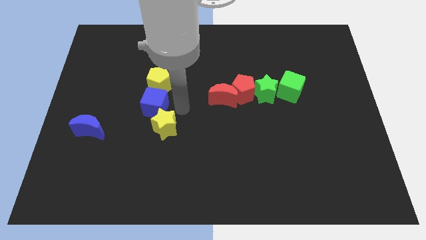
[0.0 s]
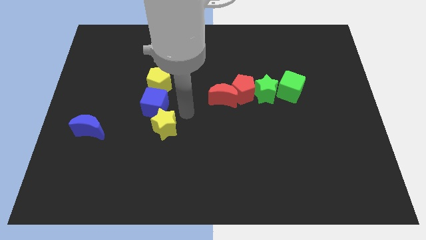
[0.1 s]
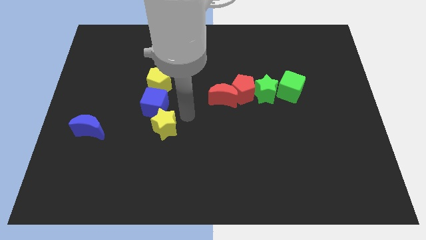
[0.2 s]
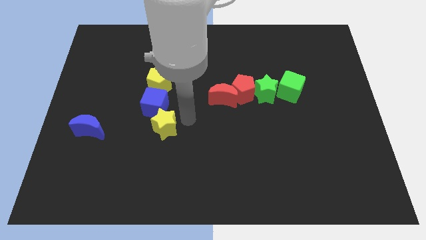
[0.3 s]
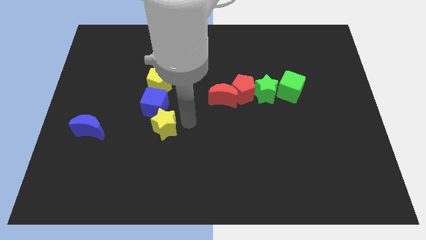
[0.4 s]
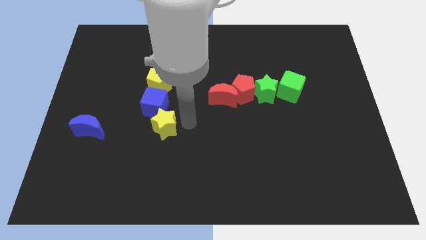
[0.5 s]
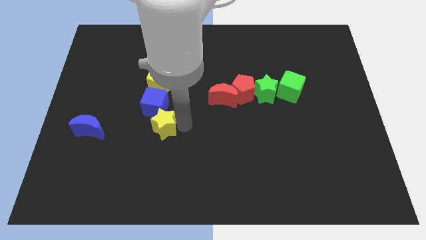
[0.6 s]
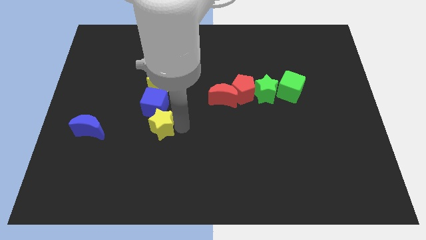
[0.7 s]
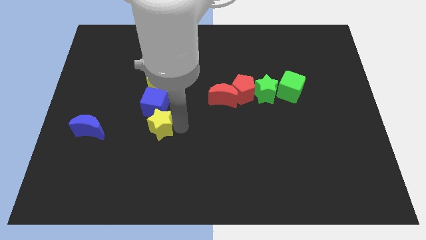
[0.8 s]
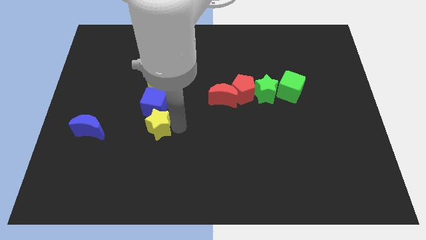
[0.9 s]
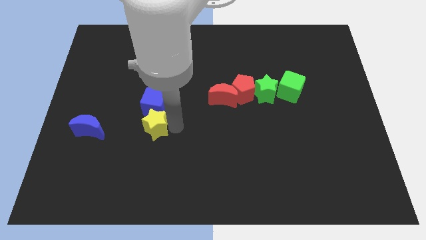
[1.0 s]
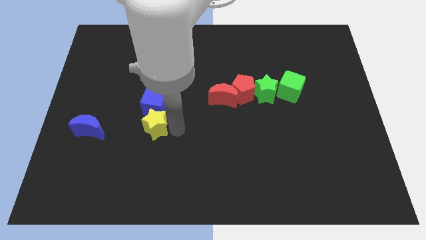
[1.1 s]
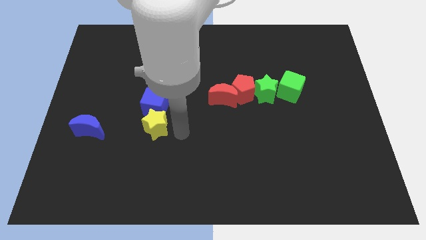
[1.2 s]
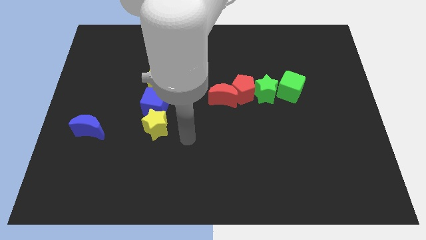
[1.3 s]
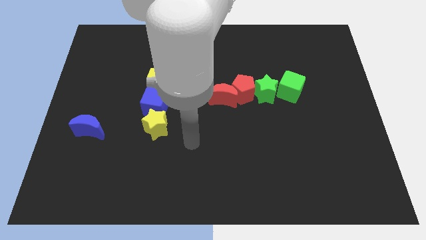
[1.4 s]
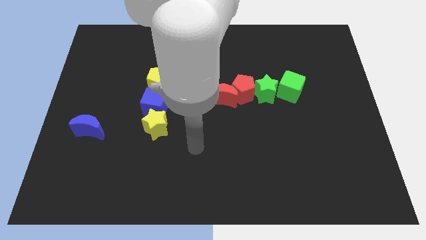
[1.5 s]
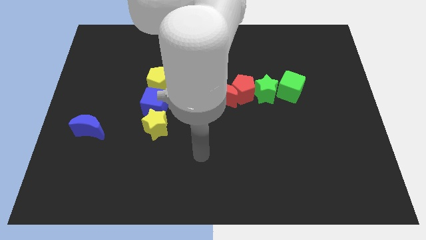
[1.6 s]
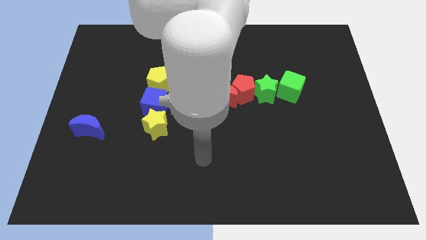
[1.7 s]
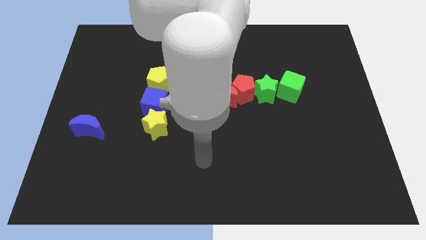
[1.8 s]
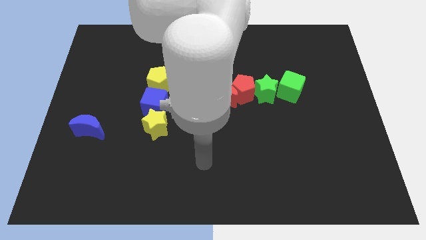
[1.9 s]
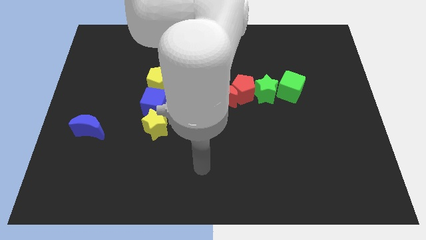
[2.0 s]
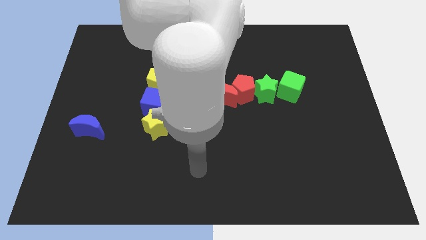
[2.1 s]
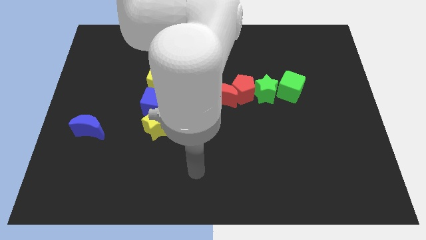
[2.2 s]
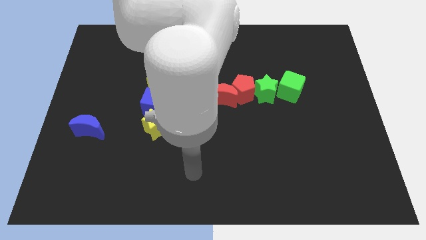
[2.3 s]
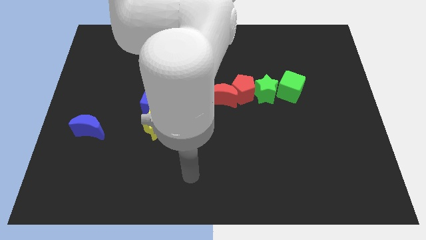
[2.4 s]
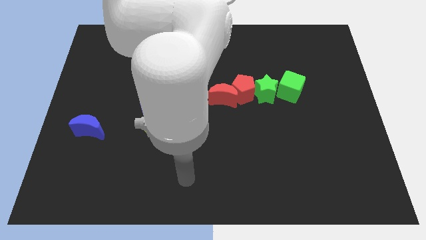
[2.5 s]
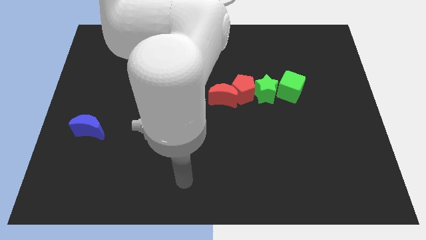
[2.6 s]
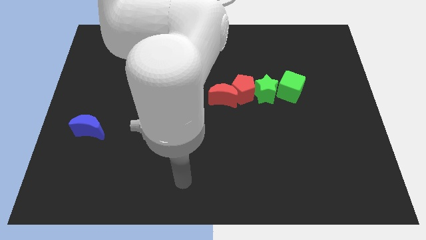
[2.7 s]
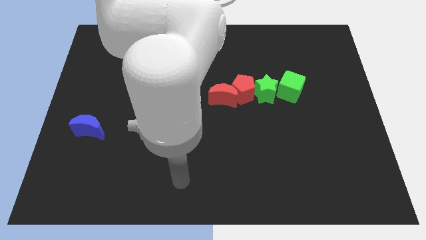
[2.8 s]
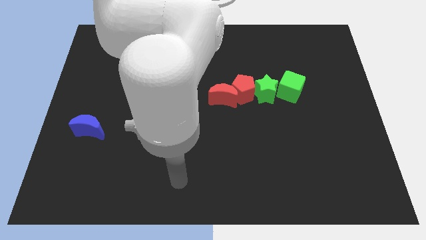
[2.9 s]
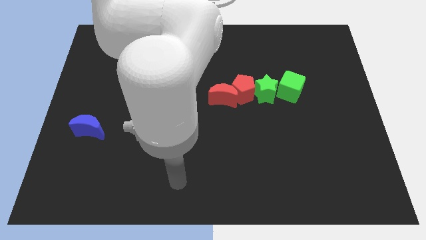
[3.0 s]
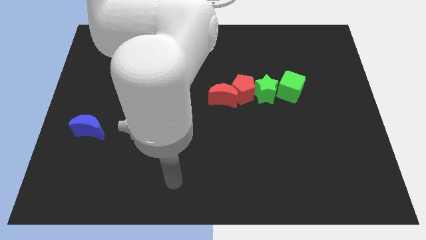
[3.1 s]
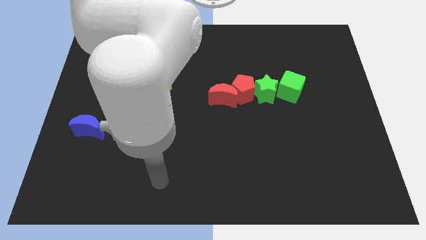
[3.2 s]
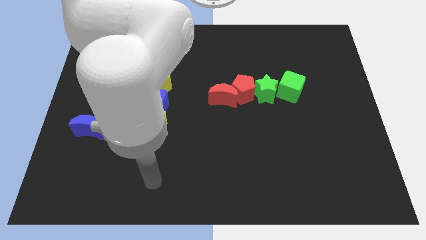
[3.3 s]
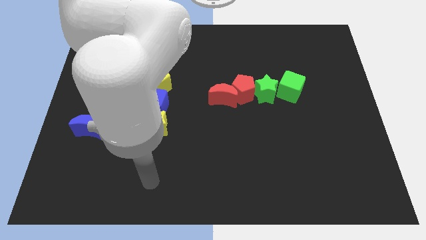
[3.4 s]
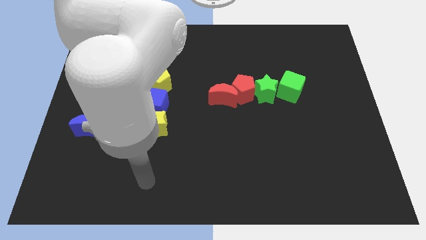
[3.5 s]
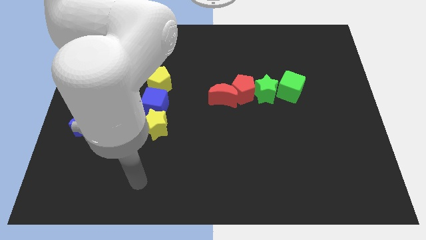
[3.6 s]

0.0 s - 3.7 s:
move the yellow star slightly left

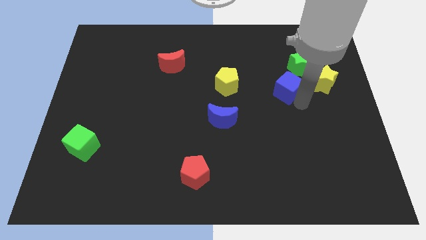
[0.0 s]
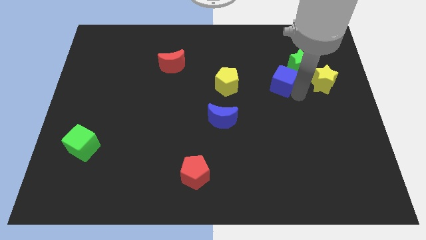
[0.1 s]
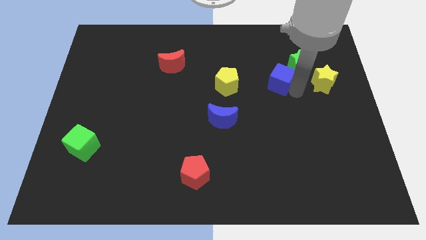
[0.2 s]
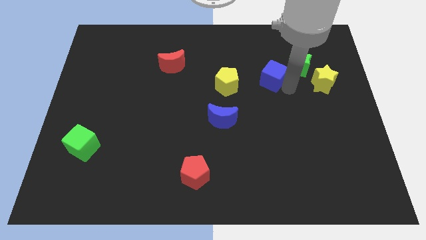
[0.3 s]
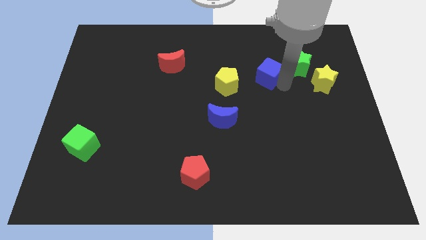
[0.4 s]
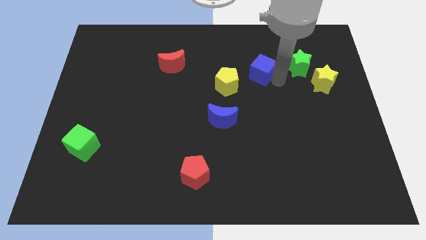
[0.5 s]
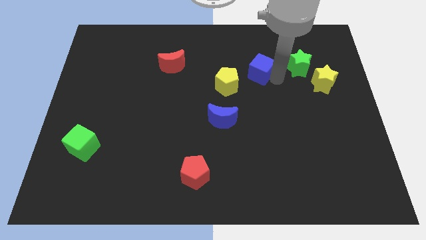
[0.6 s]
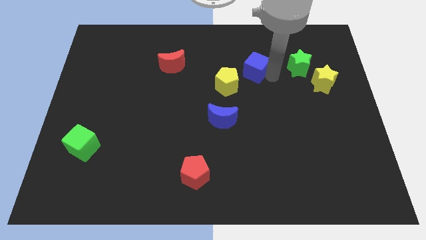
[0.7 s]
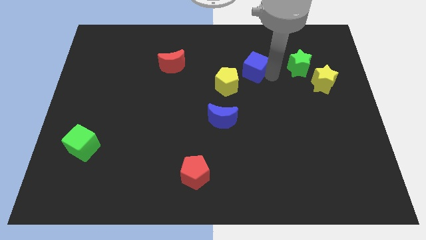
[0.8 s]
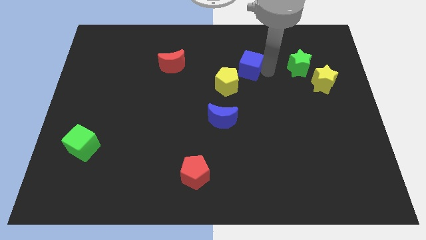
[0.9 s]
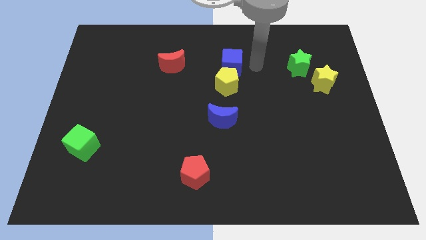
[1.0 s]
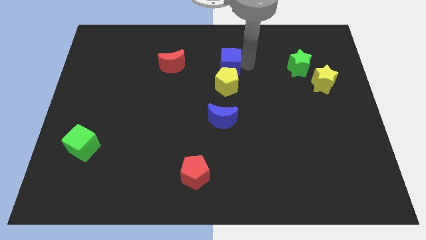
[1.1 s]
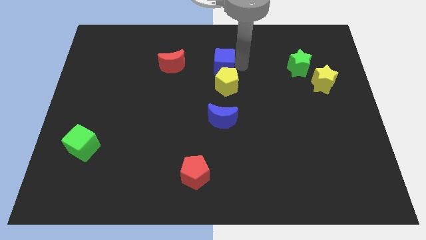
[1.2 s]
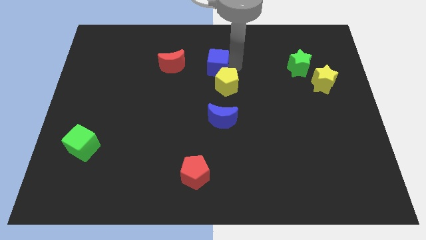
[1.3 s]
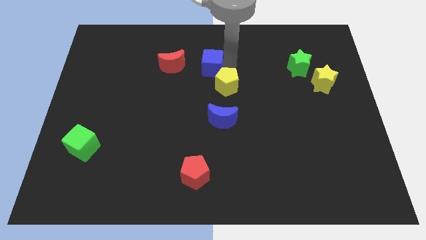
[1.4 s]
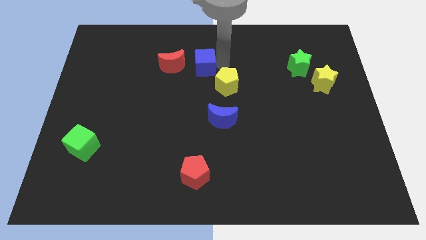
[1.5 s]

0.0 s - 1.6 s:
place the blue cube close to the red moon

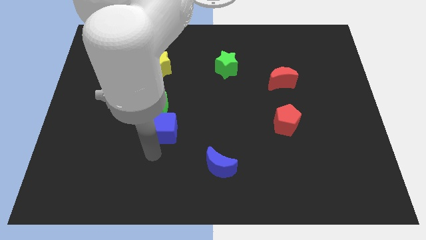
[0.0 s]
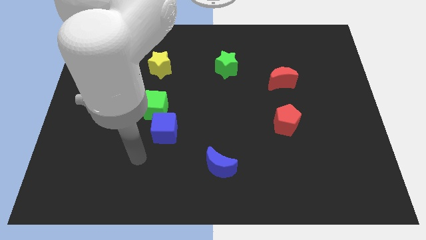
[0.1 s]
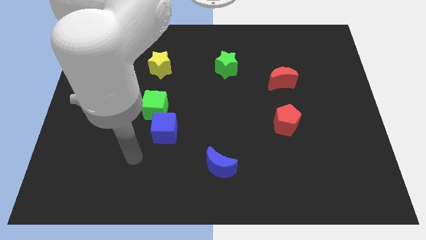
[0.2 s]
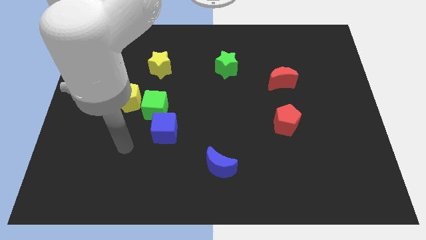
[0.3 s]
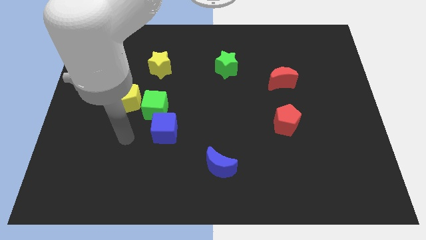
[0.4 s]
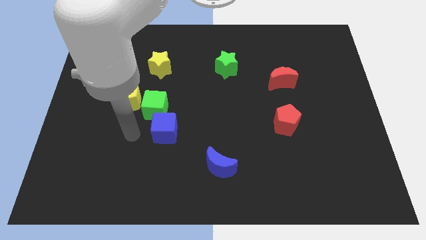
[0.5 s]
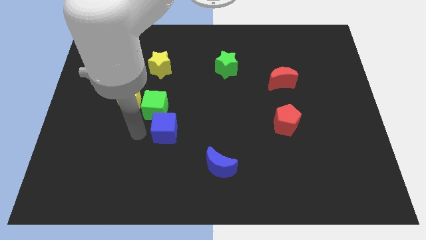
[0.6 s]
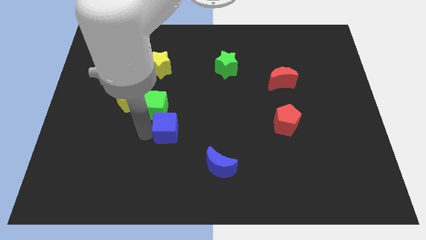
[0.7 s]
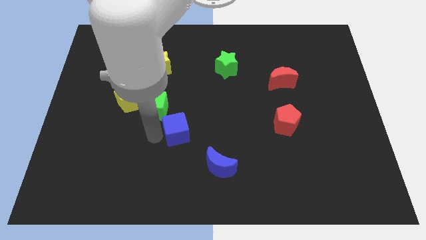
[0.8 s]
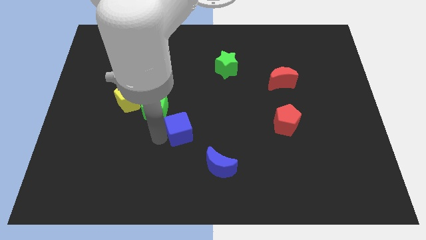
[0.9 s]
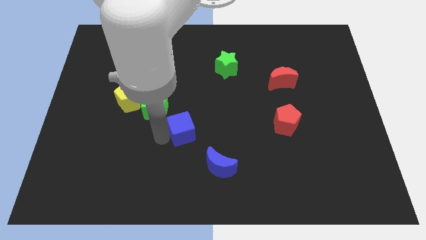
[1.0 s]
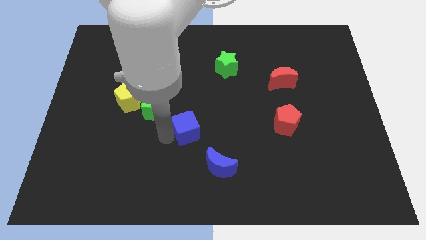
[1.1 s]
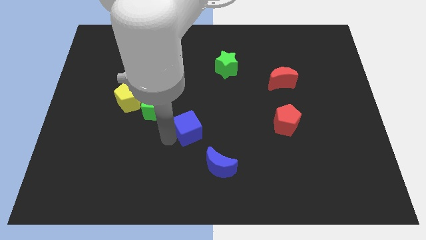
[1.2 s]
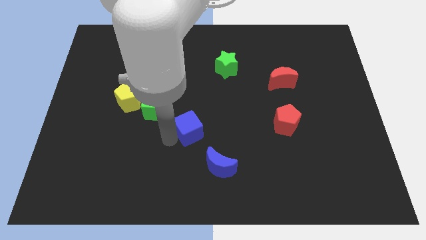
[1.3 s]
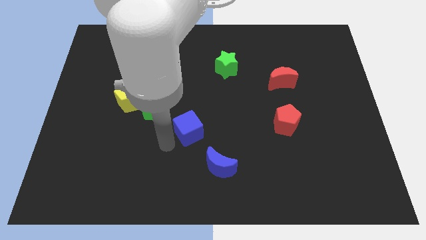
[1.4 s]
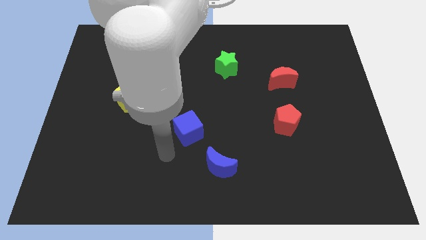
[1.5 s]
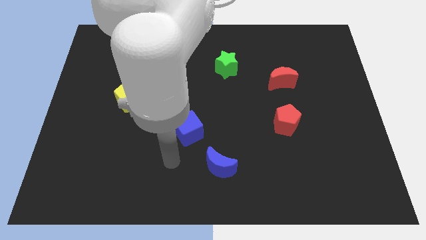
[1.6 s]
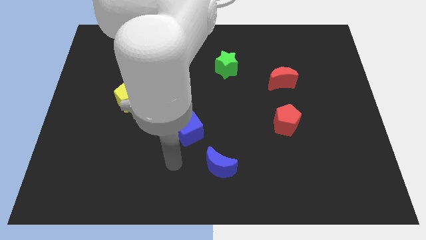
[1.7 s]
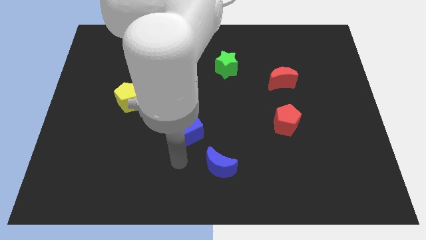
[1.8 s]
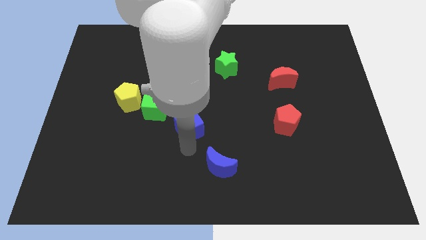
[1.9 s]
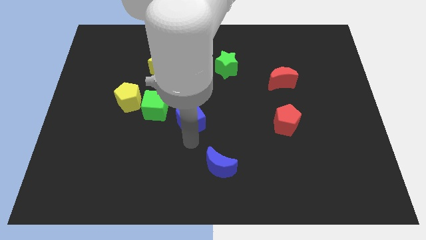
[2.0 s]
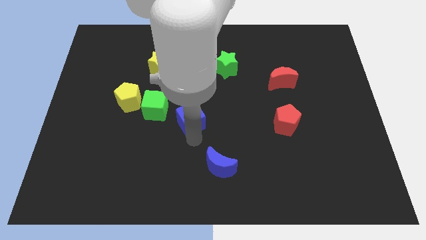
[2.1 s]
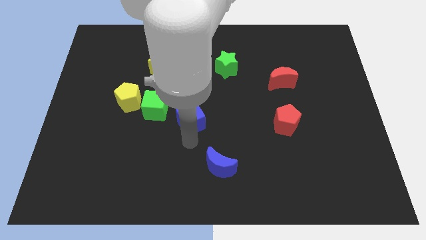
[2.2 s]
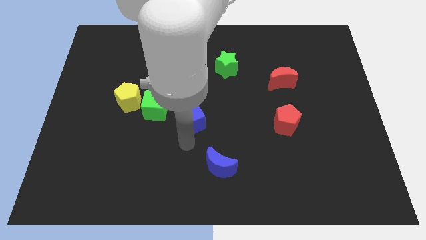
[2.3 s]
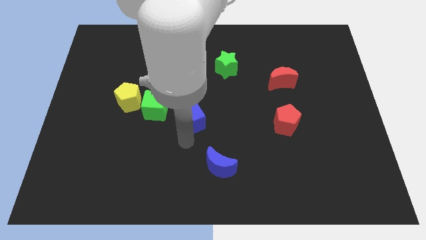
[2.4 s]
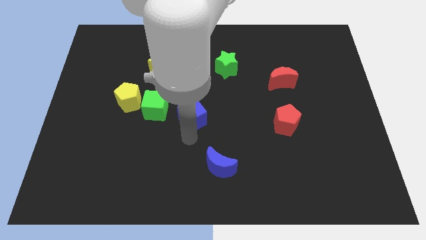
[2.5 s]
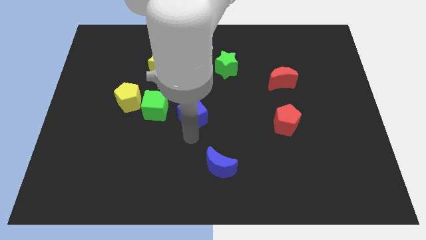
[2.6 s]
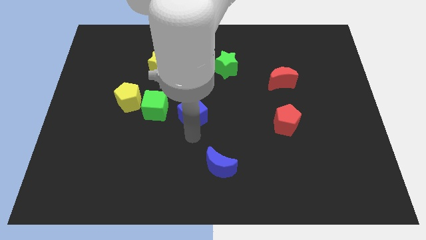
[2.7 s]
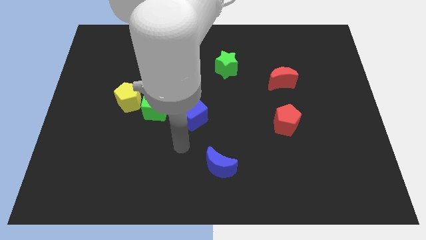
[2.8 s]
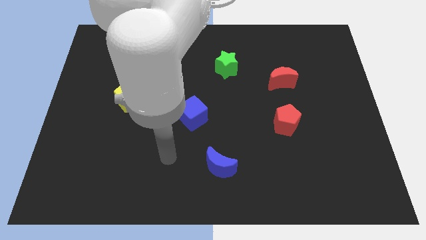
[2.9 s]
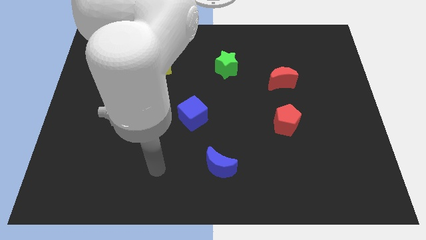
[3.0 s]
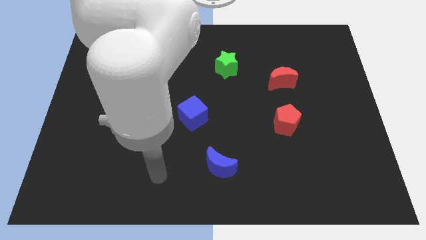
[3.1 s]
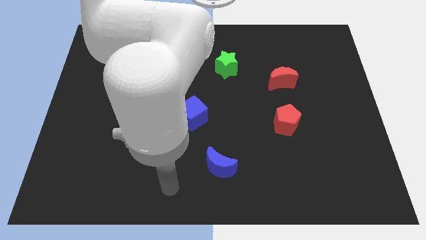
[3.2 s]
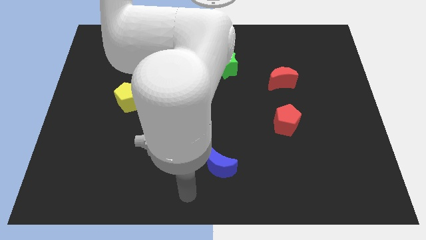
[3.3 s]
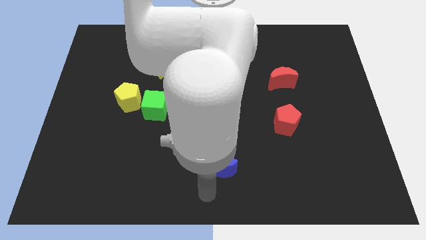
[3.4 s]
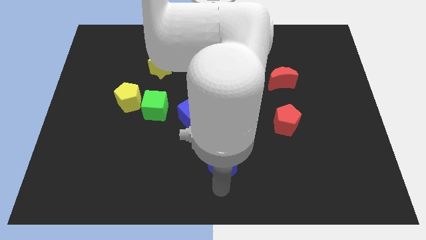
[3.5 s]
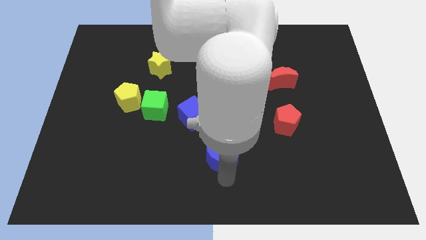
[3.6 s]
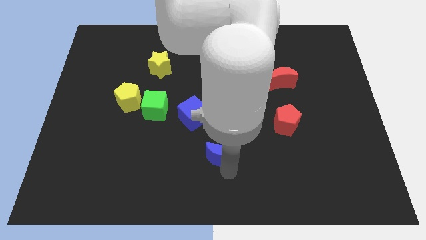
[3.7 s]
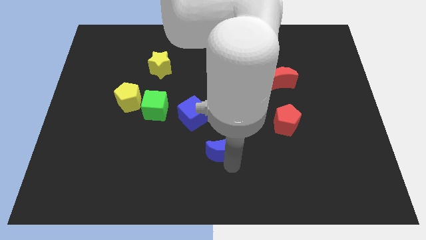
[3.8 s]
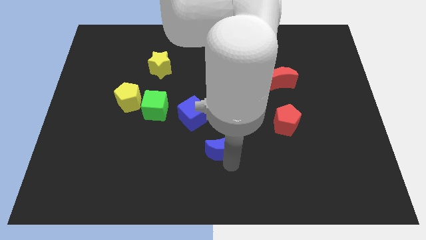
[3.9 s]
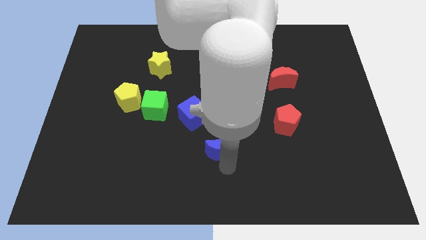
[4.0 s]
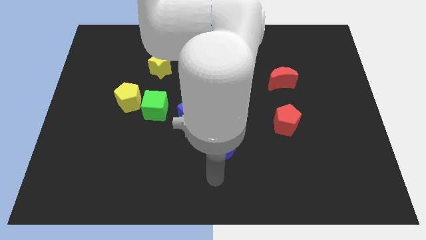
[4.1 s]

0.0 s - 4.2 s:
place the blue cube to the right of green cube
